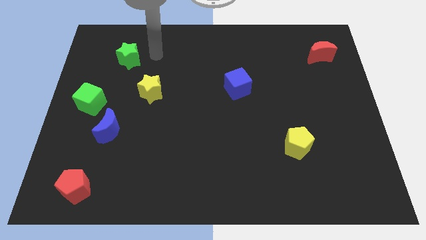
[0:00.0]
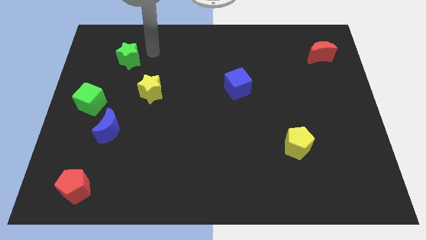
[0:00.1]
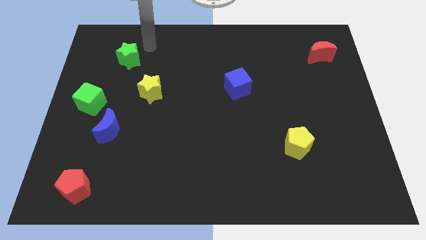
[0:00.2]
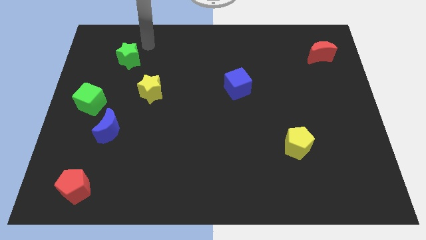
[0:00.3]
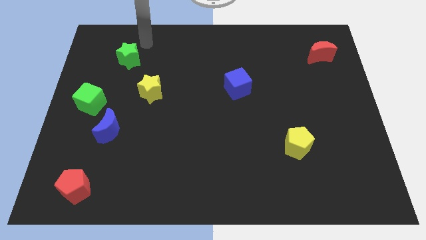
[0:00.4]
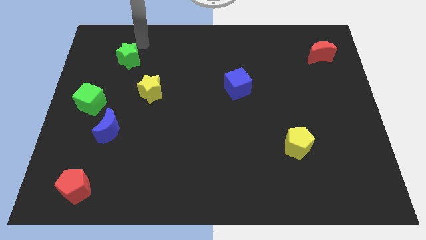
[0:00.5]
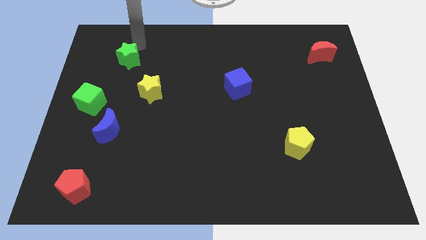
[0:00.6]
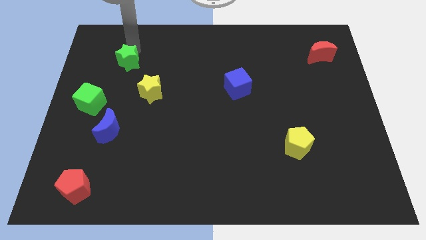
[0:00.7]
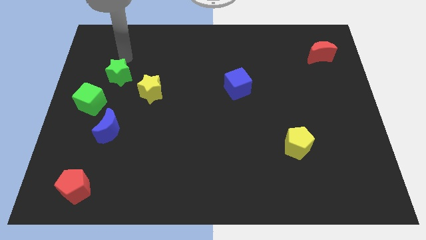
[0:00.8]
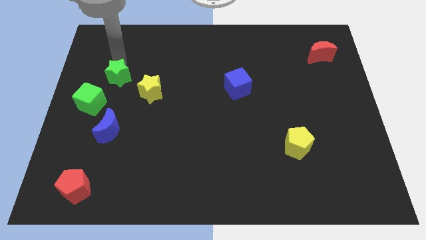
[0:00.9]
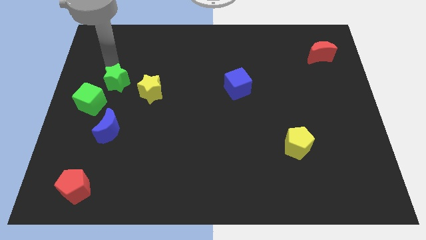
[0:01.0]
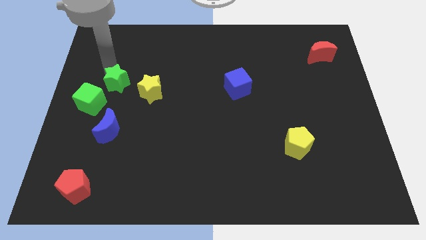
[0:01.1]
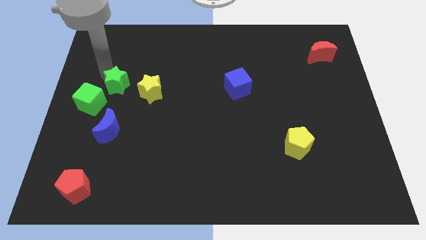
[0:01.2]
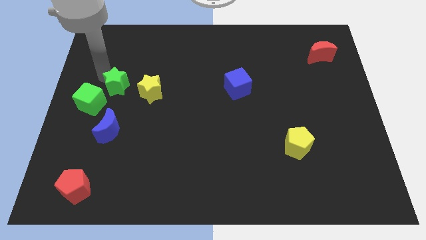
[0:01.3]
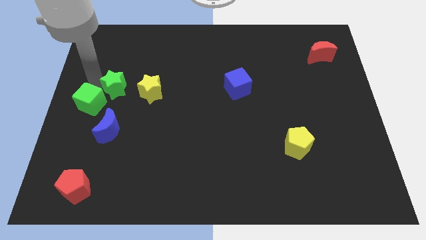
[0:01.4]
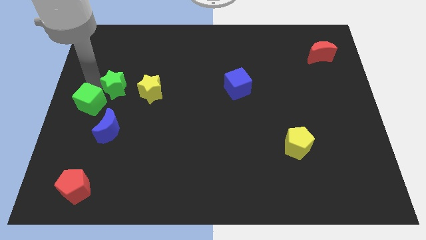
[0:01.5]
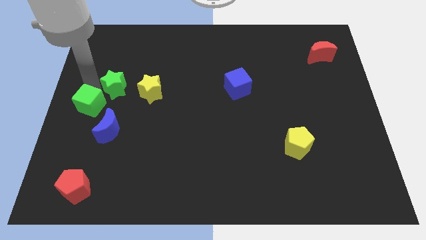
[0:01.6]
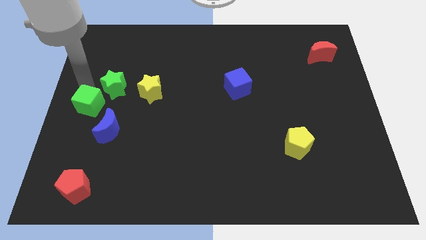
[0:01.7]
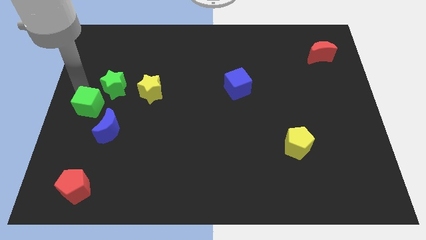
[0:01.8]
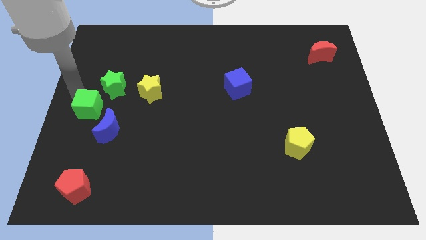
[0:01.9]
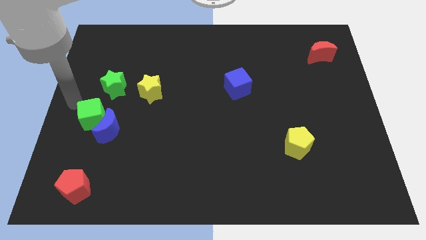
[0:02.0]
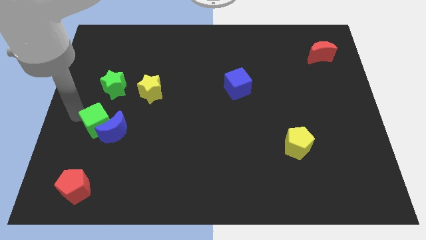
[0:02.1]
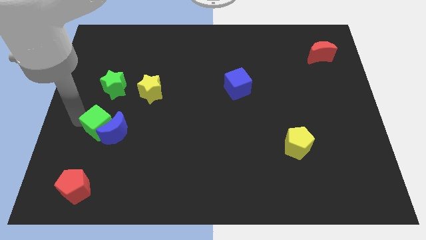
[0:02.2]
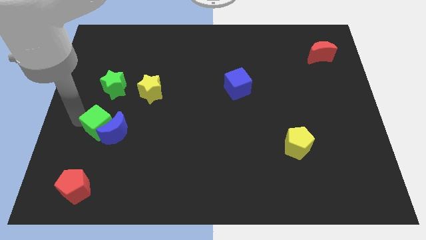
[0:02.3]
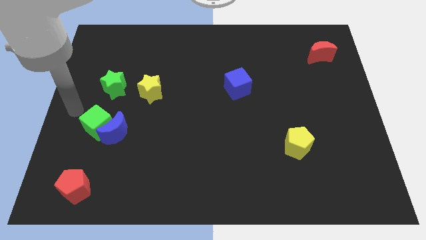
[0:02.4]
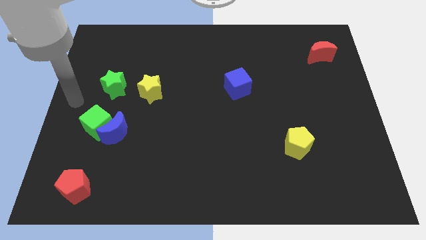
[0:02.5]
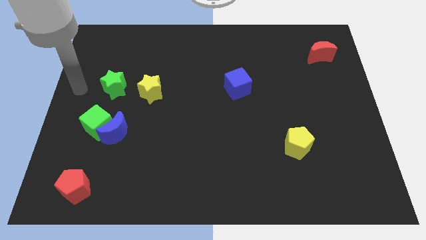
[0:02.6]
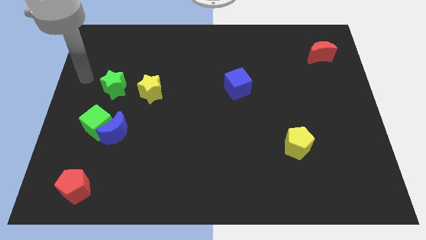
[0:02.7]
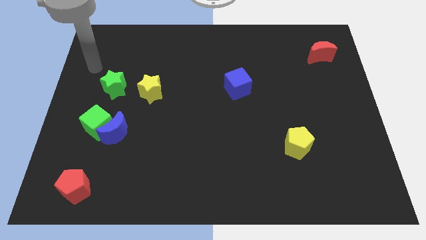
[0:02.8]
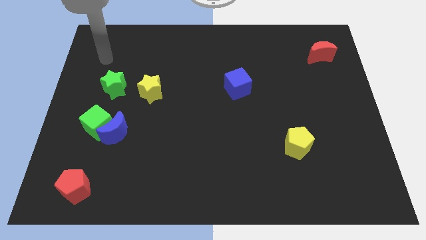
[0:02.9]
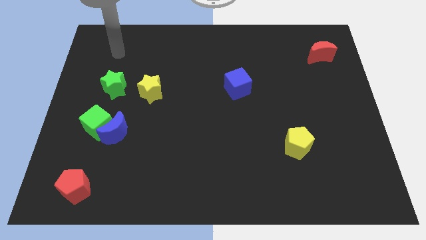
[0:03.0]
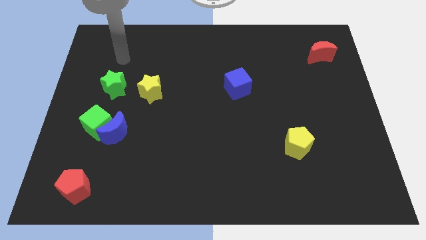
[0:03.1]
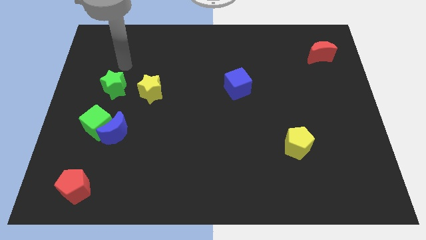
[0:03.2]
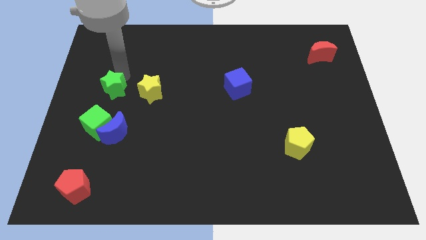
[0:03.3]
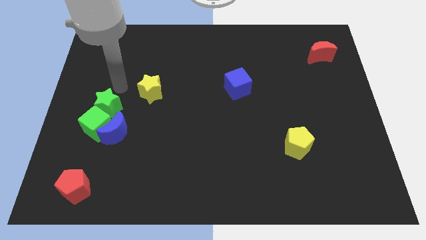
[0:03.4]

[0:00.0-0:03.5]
slide the green star to the left of the yellow star

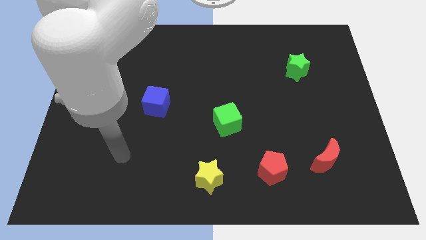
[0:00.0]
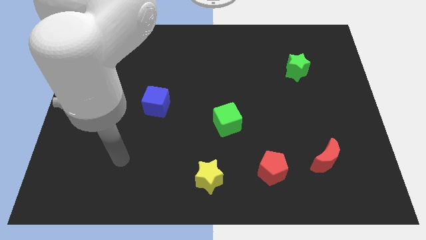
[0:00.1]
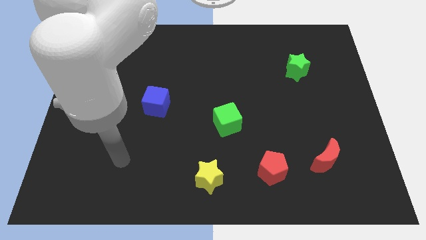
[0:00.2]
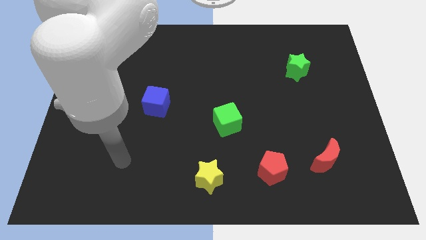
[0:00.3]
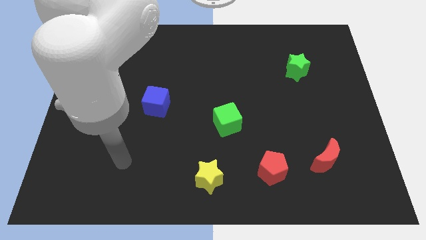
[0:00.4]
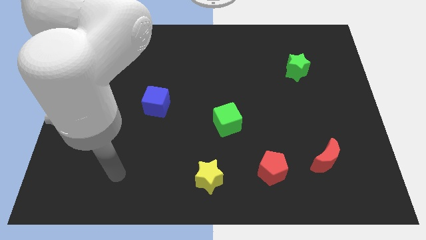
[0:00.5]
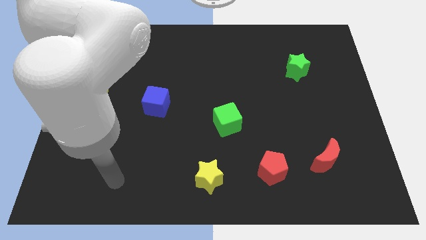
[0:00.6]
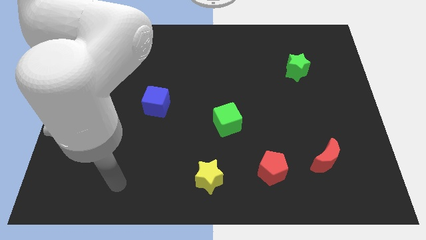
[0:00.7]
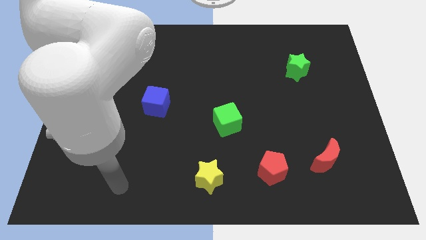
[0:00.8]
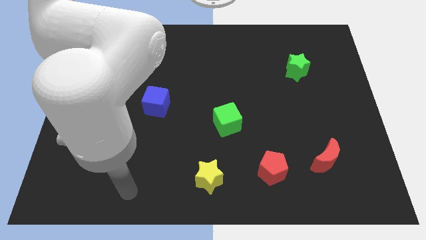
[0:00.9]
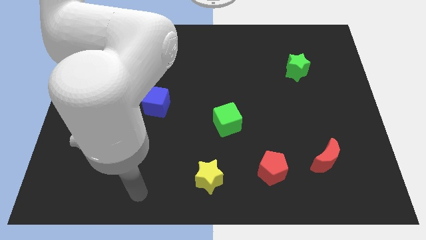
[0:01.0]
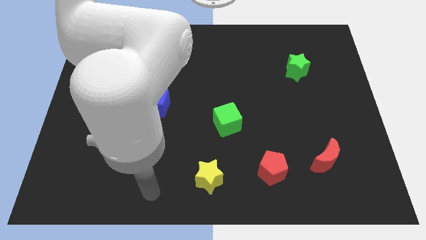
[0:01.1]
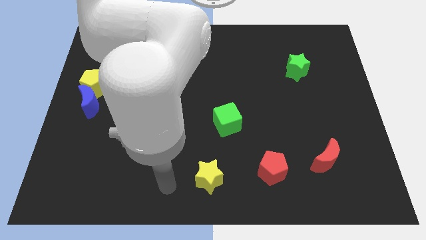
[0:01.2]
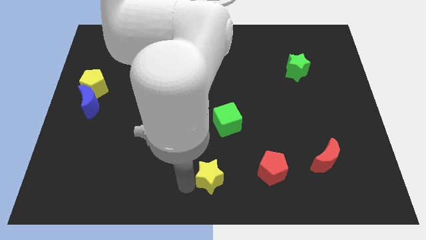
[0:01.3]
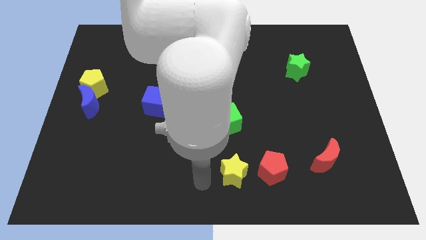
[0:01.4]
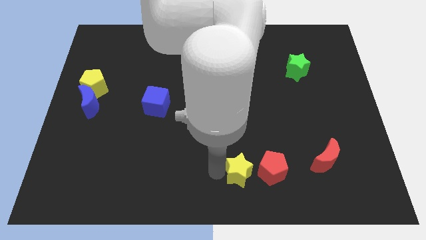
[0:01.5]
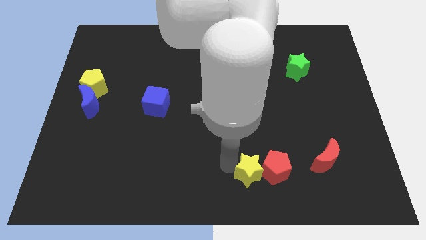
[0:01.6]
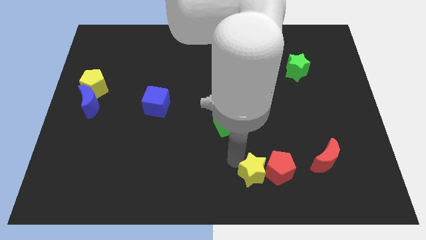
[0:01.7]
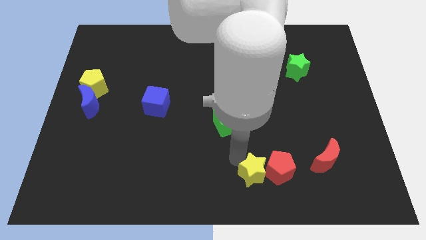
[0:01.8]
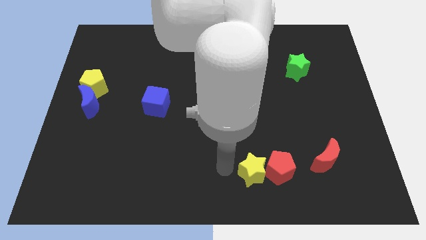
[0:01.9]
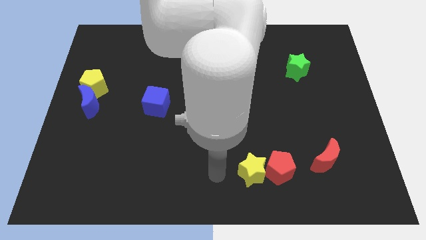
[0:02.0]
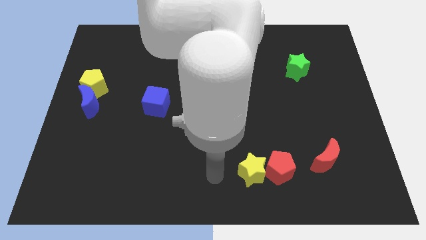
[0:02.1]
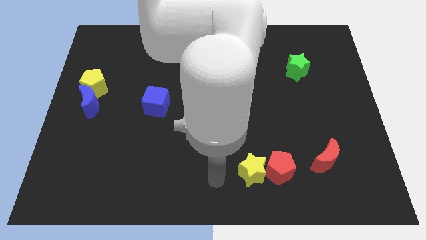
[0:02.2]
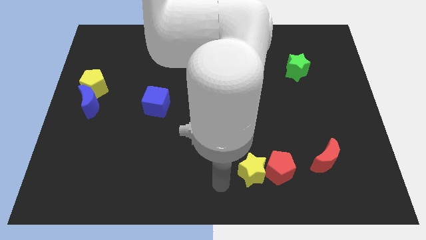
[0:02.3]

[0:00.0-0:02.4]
move the yellow star into the red pentagon

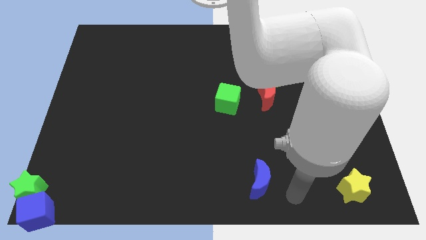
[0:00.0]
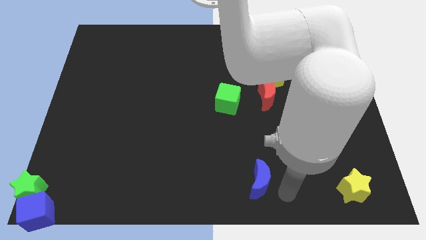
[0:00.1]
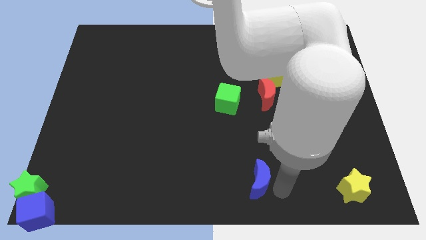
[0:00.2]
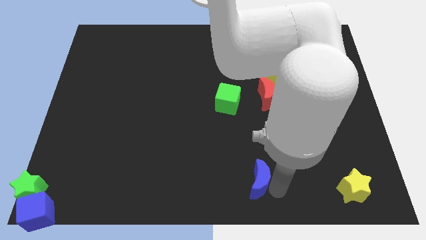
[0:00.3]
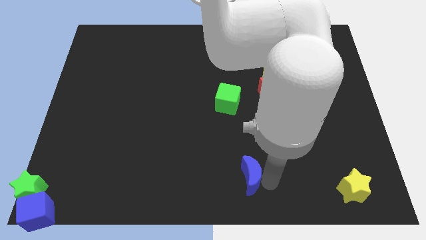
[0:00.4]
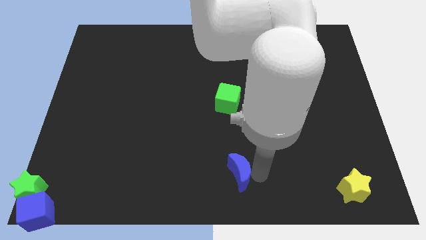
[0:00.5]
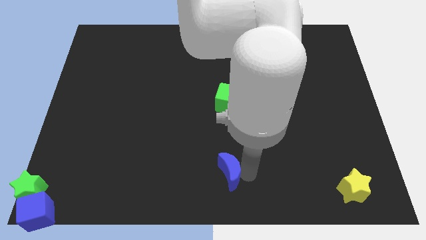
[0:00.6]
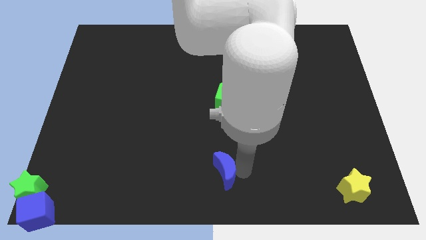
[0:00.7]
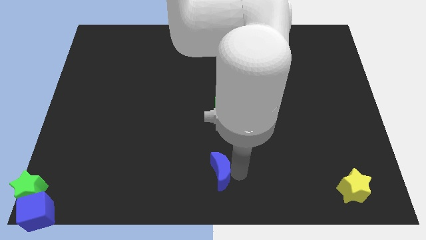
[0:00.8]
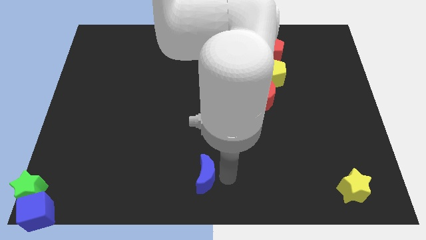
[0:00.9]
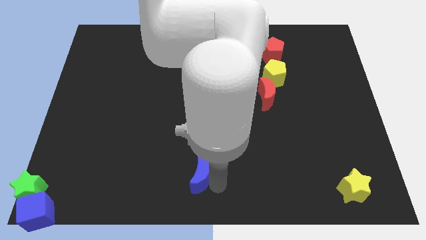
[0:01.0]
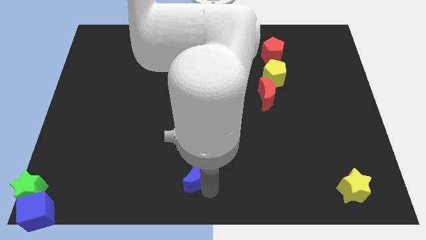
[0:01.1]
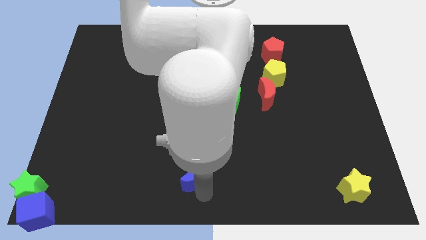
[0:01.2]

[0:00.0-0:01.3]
place the blue moon below the green cube

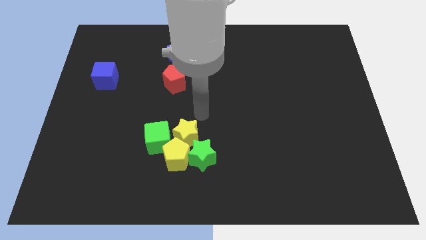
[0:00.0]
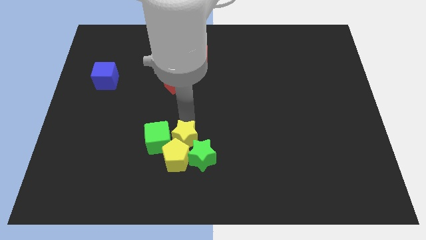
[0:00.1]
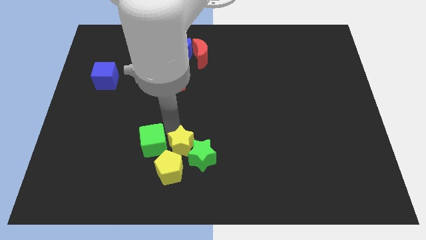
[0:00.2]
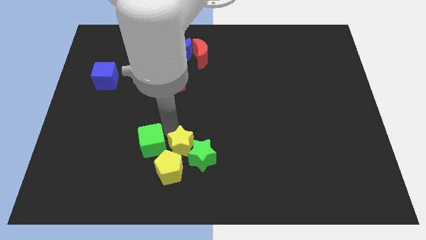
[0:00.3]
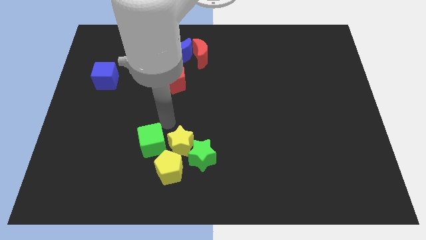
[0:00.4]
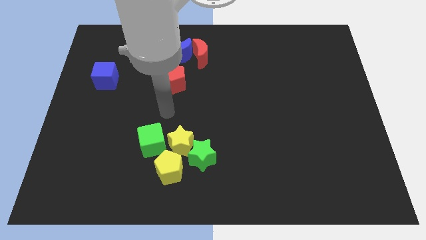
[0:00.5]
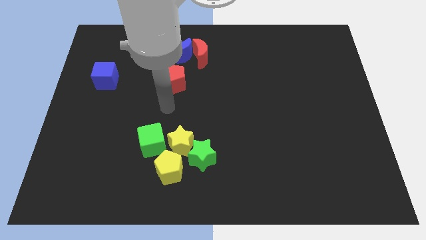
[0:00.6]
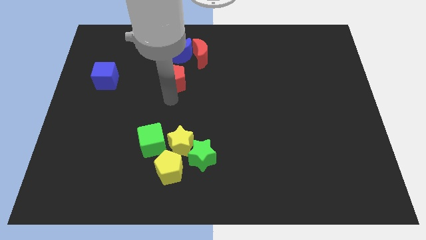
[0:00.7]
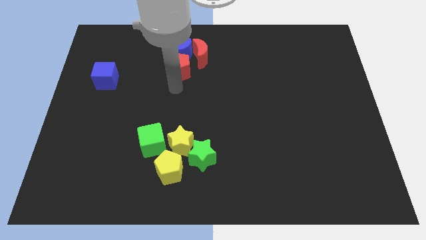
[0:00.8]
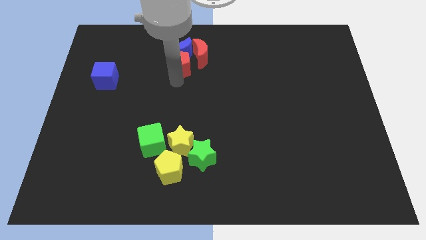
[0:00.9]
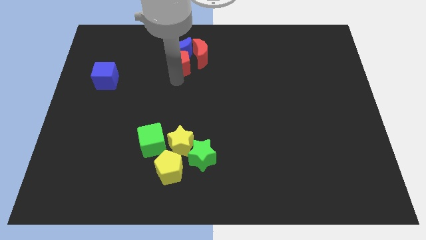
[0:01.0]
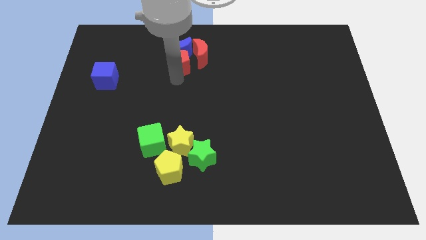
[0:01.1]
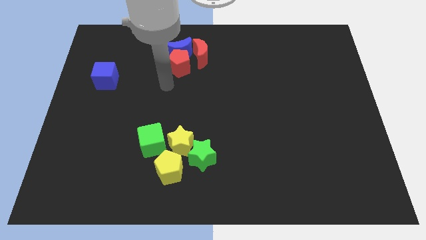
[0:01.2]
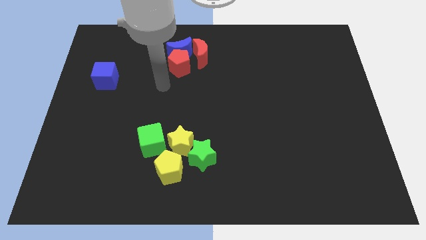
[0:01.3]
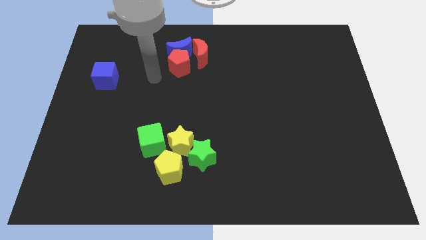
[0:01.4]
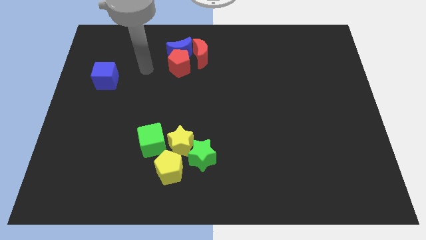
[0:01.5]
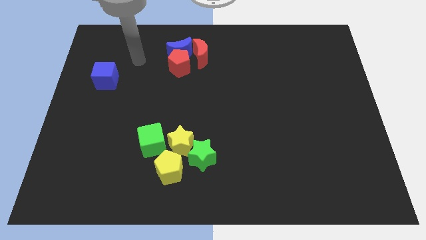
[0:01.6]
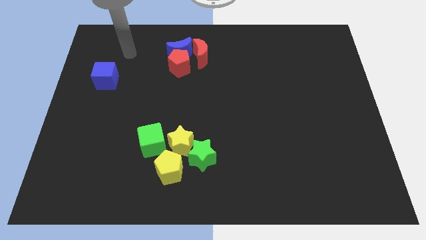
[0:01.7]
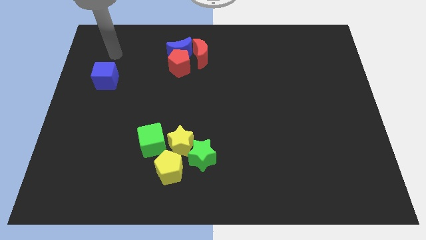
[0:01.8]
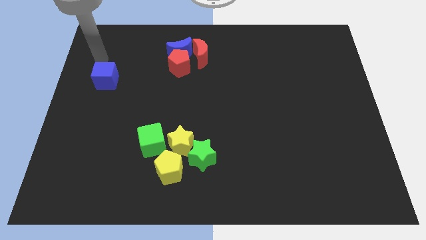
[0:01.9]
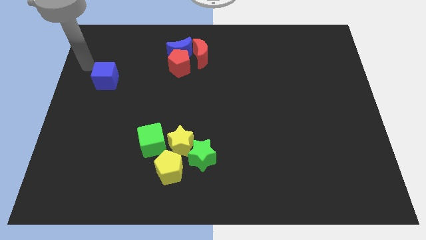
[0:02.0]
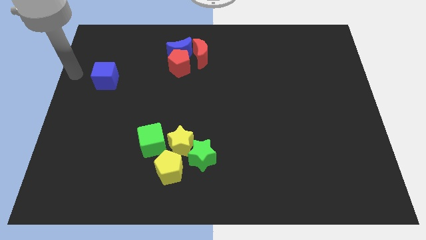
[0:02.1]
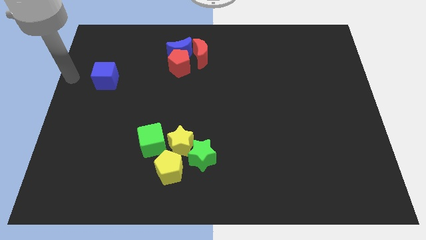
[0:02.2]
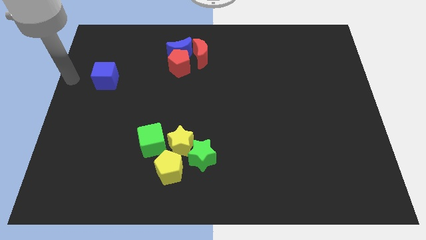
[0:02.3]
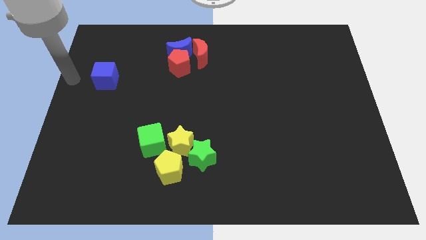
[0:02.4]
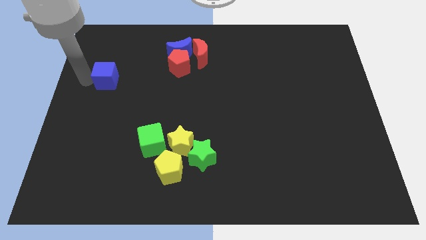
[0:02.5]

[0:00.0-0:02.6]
drag the red pentagon into the blue crescent
